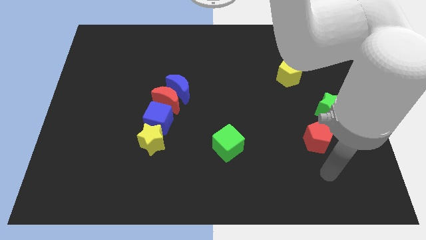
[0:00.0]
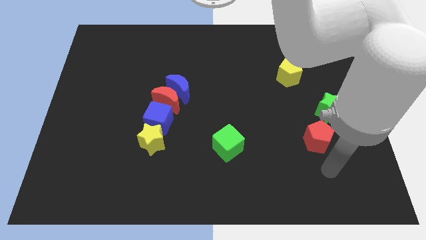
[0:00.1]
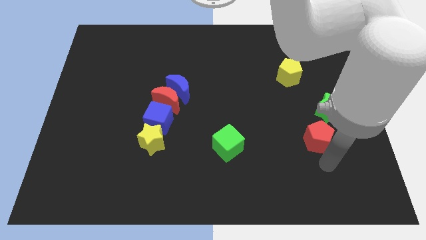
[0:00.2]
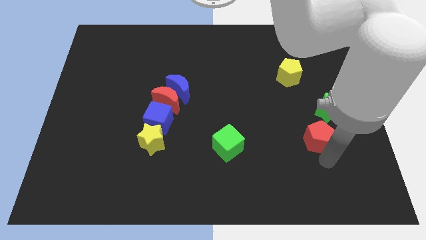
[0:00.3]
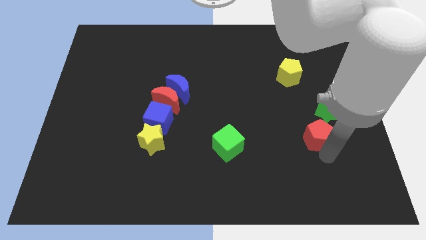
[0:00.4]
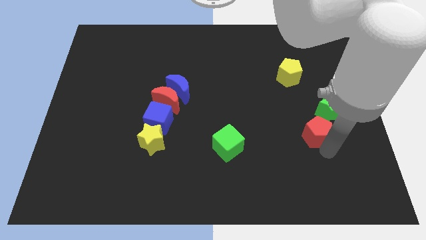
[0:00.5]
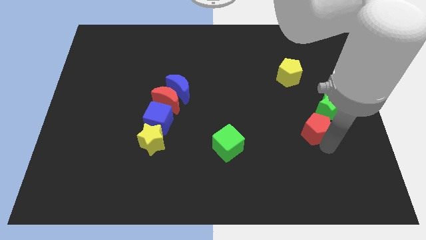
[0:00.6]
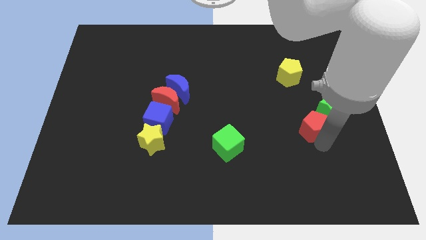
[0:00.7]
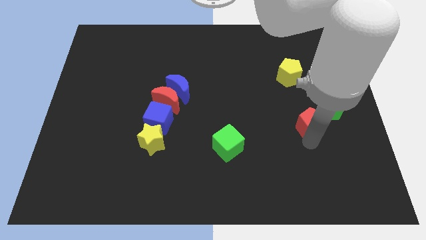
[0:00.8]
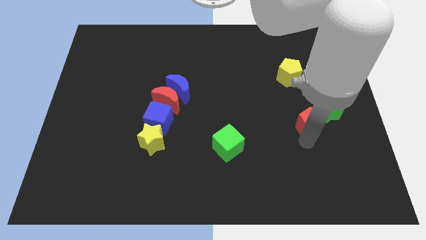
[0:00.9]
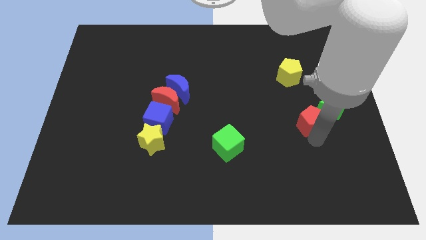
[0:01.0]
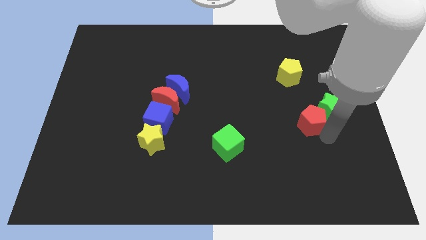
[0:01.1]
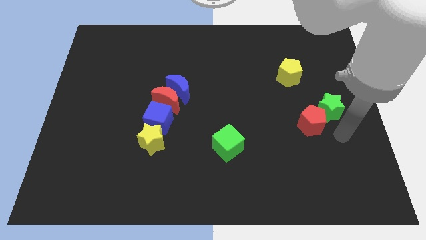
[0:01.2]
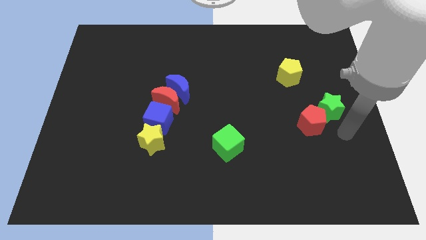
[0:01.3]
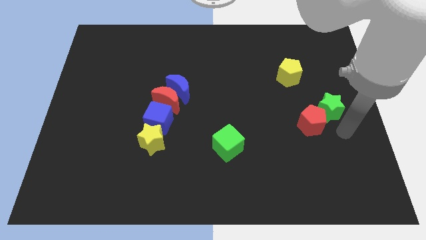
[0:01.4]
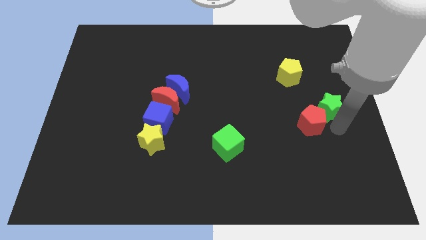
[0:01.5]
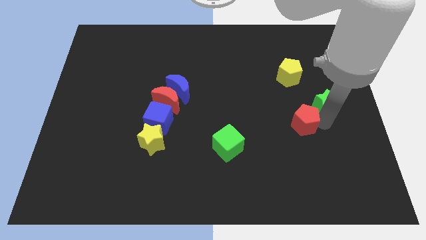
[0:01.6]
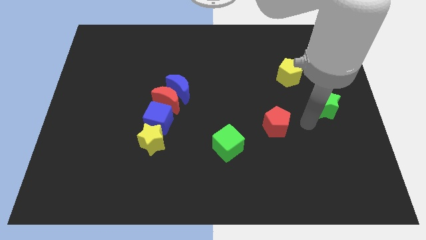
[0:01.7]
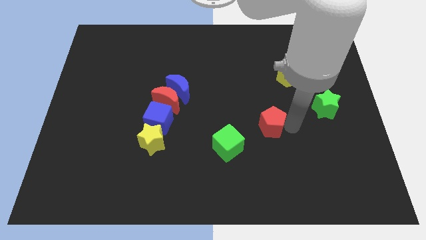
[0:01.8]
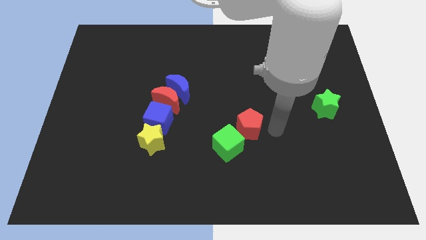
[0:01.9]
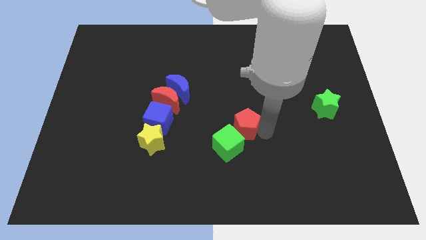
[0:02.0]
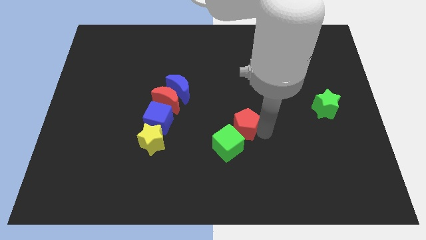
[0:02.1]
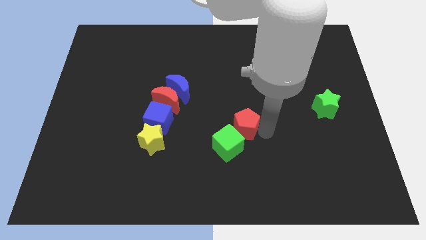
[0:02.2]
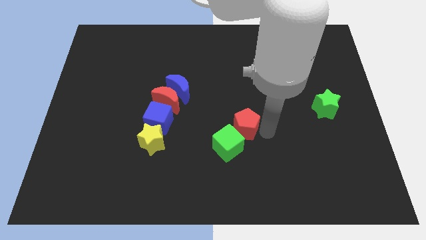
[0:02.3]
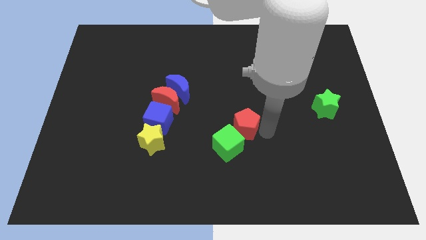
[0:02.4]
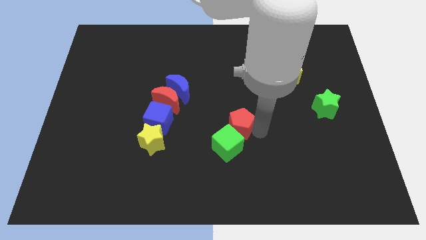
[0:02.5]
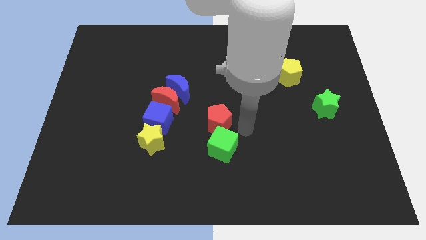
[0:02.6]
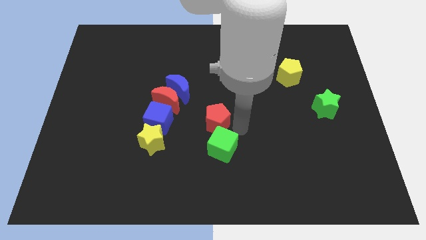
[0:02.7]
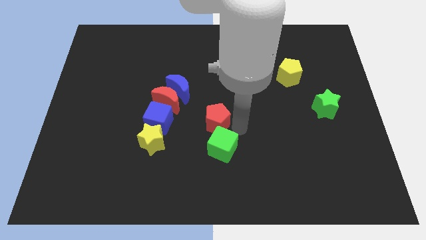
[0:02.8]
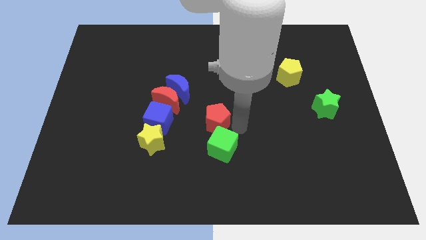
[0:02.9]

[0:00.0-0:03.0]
move the red pentagon towards the green cube

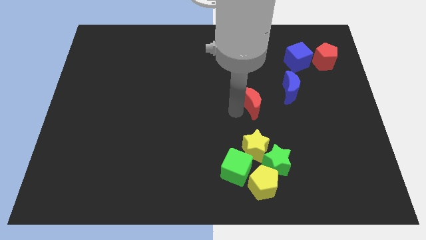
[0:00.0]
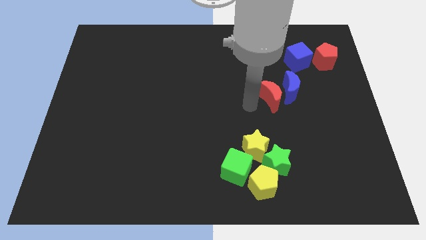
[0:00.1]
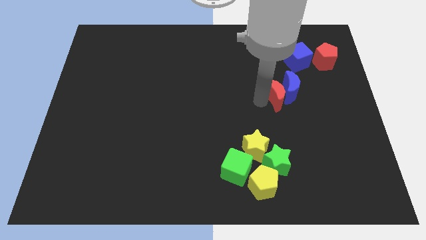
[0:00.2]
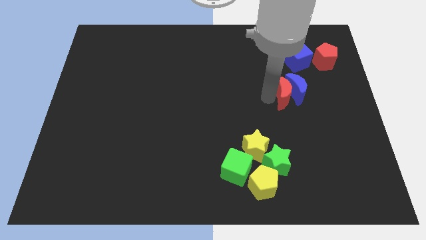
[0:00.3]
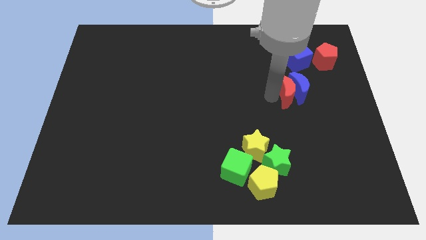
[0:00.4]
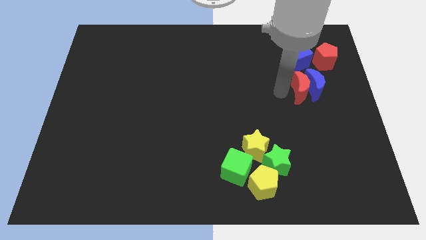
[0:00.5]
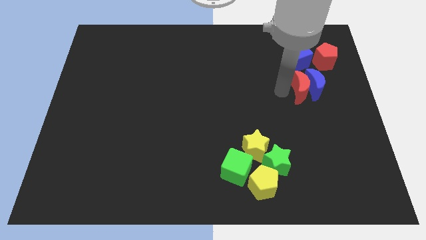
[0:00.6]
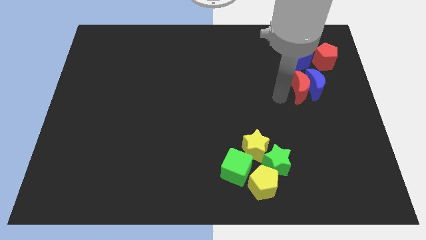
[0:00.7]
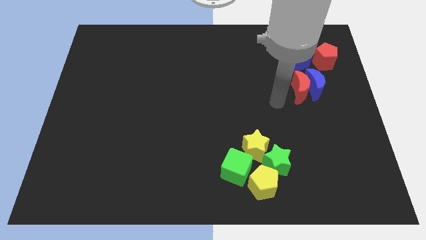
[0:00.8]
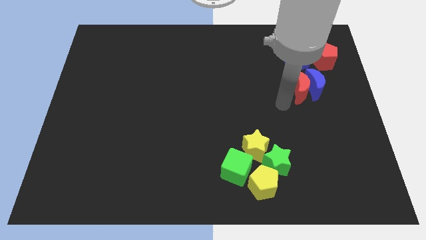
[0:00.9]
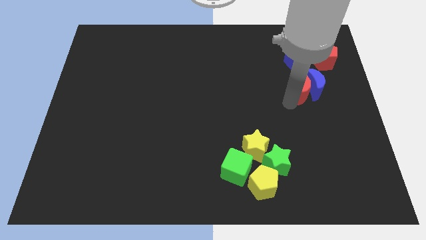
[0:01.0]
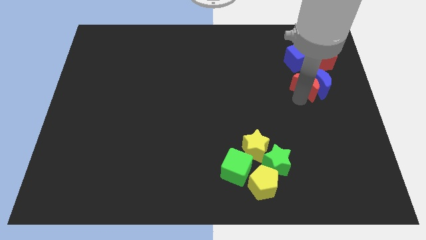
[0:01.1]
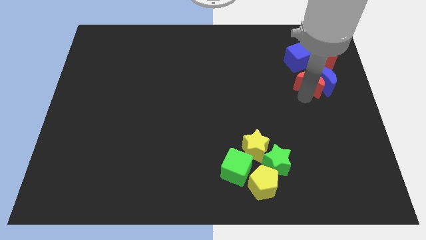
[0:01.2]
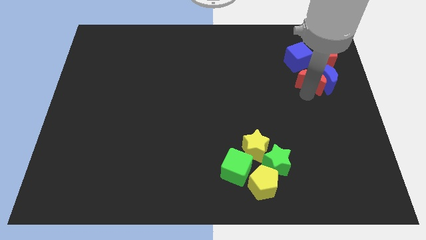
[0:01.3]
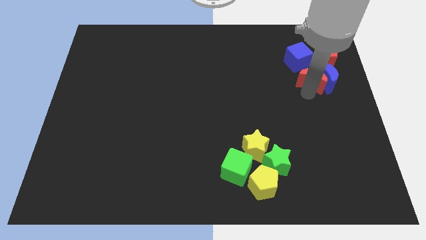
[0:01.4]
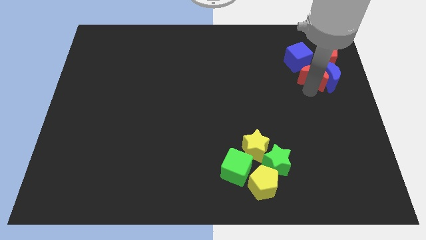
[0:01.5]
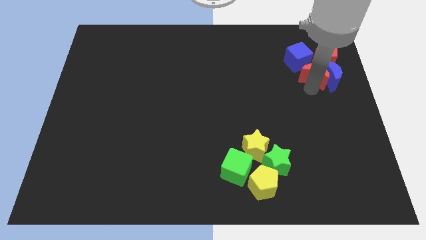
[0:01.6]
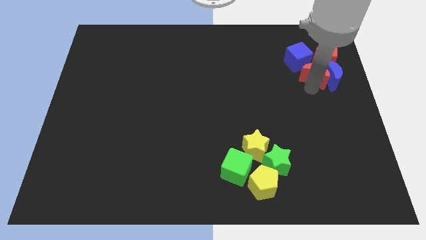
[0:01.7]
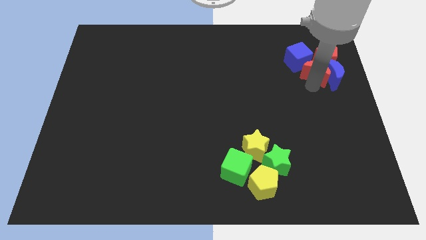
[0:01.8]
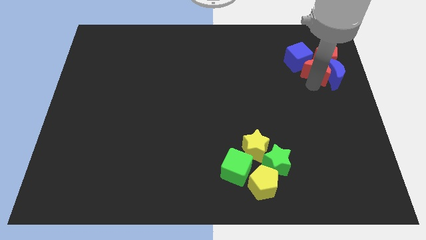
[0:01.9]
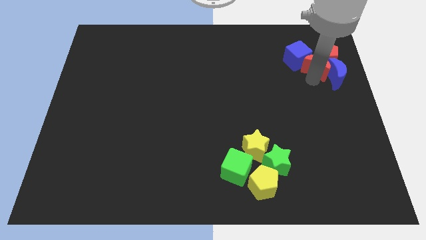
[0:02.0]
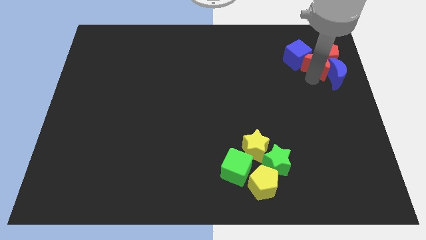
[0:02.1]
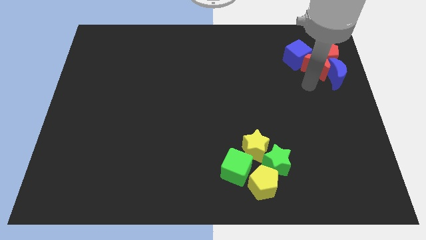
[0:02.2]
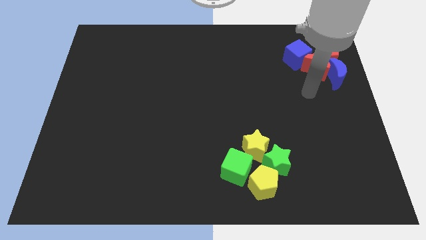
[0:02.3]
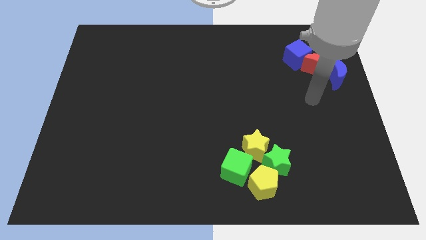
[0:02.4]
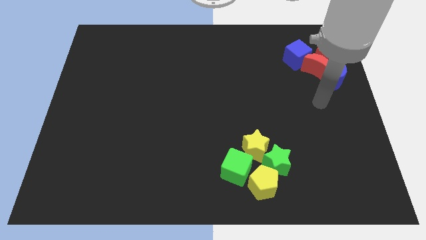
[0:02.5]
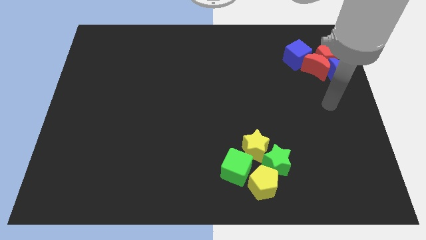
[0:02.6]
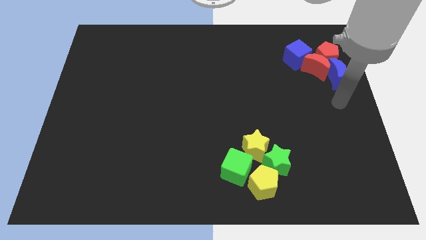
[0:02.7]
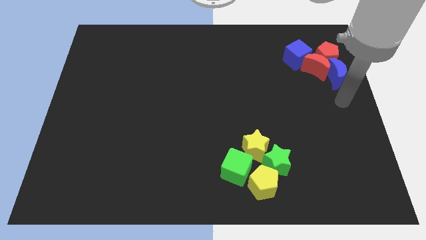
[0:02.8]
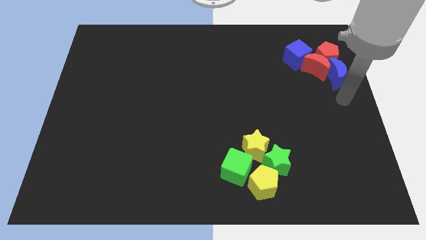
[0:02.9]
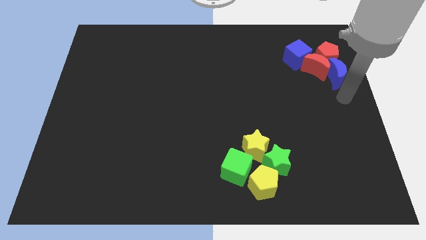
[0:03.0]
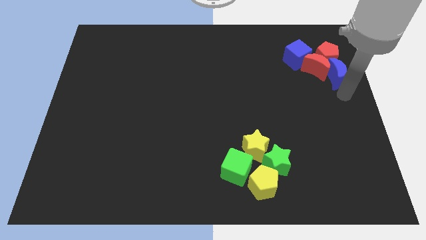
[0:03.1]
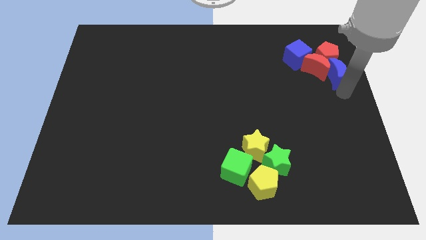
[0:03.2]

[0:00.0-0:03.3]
move the moon blocks to the blue cube

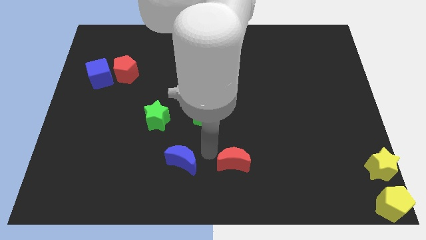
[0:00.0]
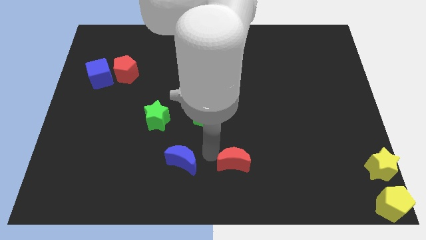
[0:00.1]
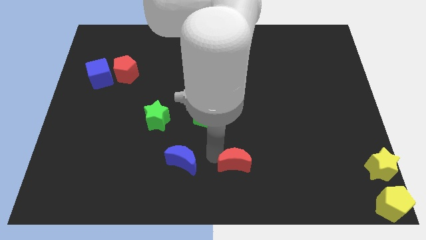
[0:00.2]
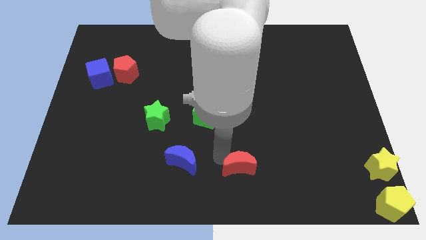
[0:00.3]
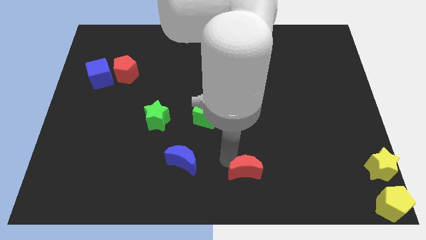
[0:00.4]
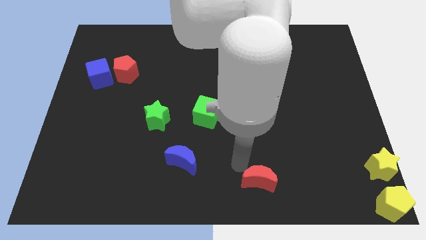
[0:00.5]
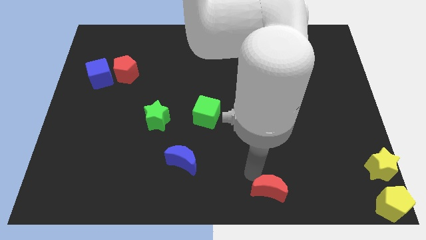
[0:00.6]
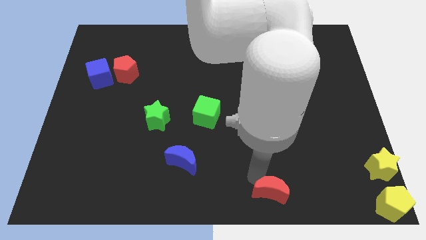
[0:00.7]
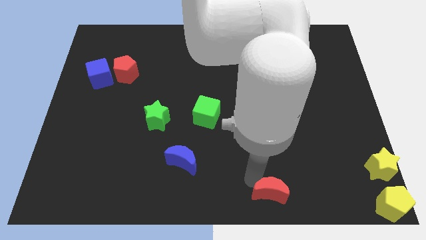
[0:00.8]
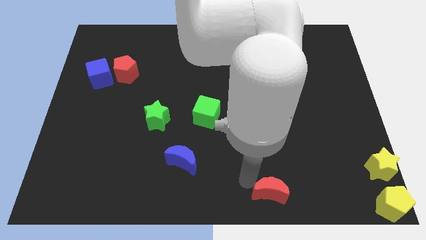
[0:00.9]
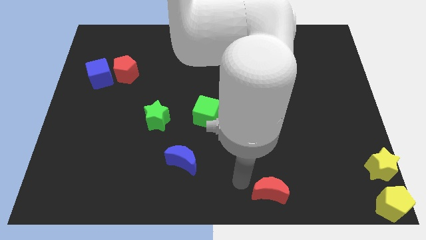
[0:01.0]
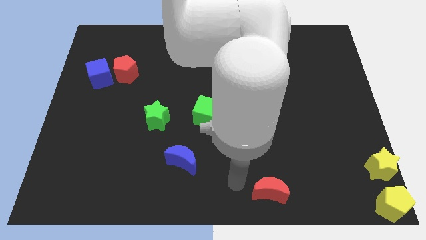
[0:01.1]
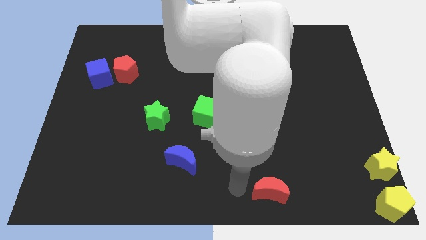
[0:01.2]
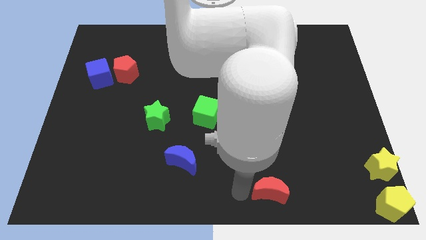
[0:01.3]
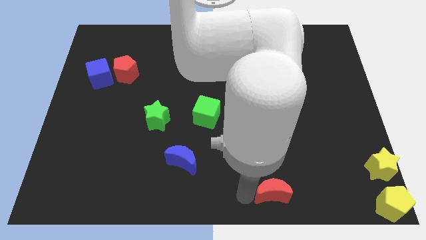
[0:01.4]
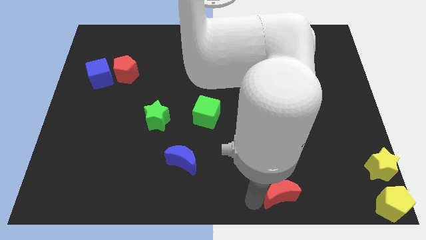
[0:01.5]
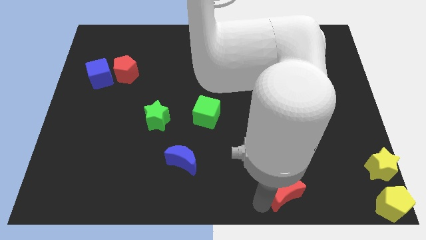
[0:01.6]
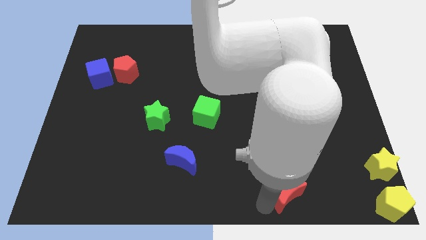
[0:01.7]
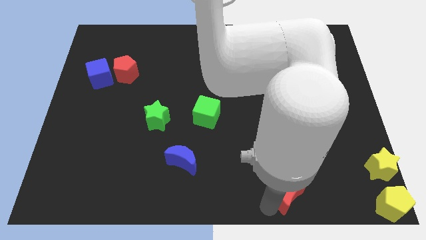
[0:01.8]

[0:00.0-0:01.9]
move red moon towards yellow pentagon

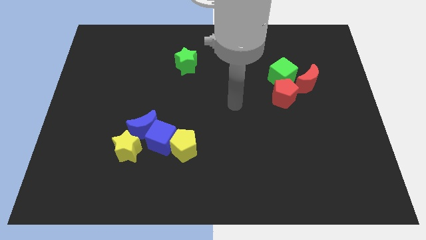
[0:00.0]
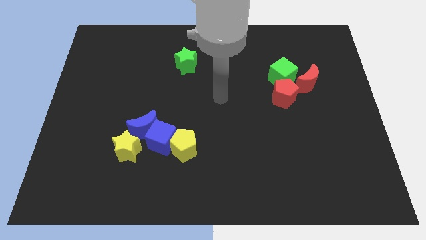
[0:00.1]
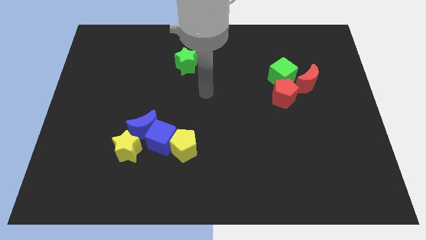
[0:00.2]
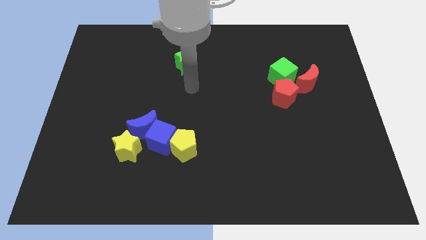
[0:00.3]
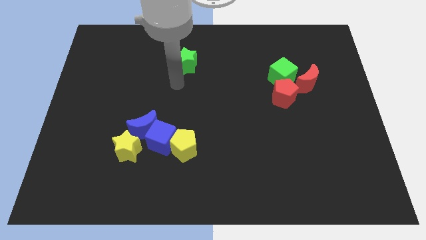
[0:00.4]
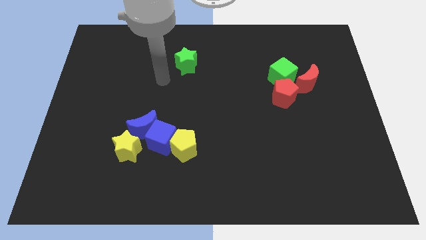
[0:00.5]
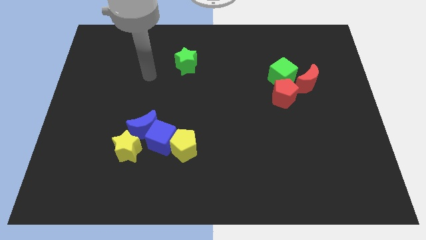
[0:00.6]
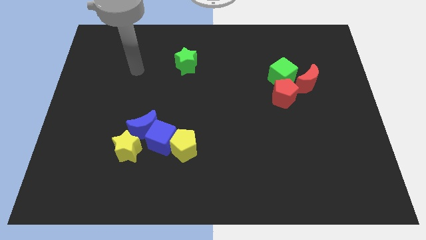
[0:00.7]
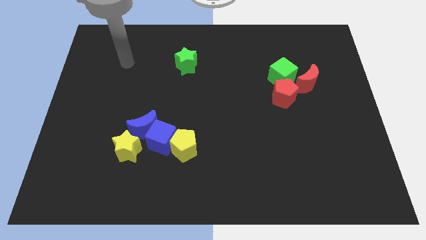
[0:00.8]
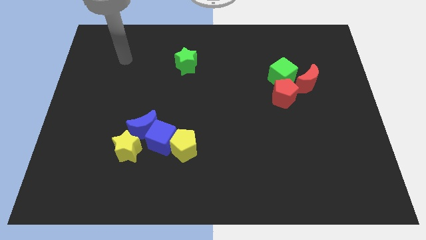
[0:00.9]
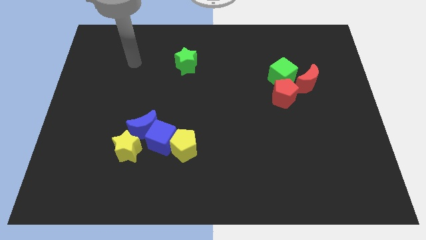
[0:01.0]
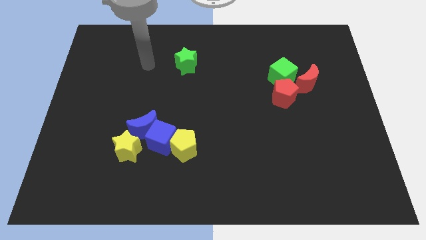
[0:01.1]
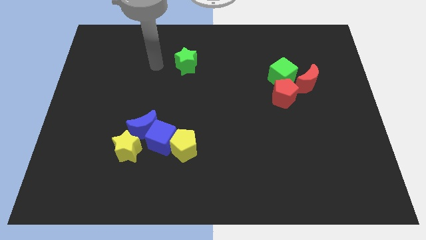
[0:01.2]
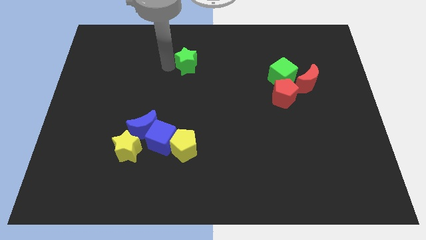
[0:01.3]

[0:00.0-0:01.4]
point your arm close to green star
